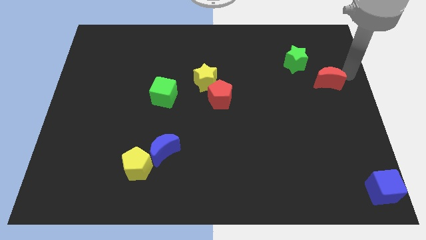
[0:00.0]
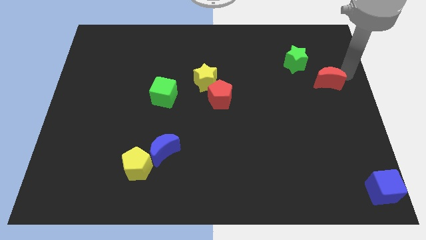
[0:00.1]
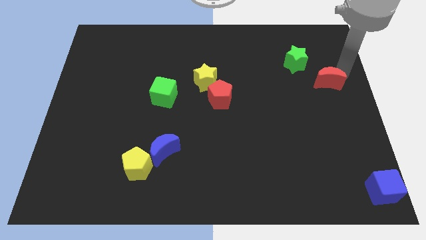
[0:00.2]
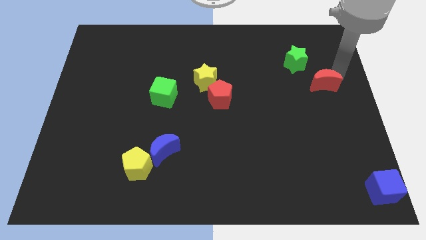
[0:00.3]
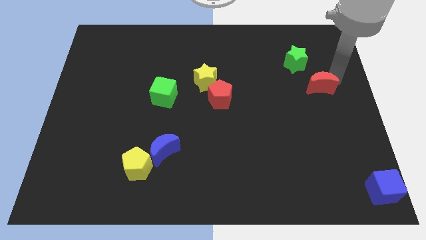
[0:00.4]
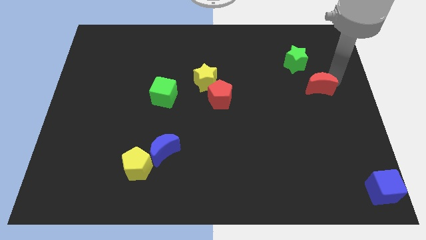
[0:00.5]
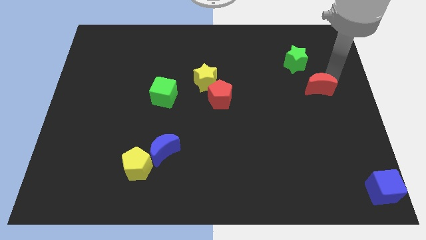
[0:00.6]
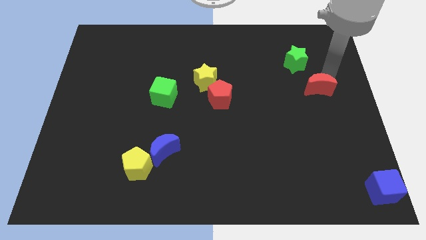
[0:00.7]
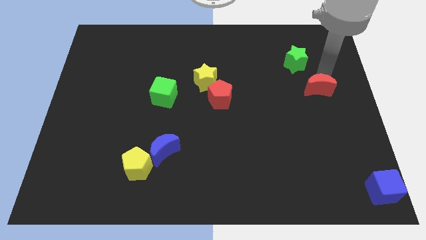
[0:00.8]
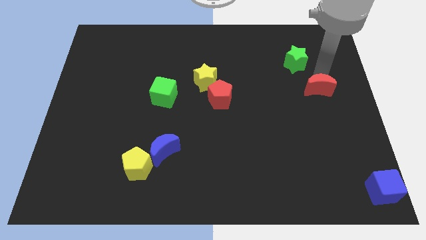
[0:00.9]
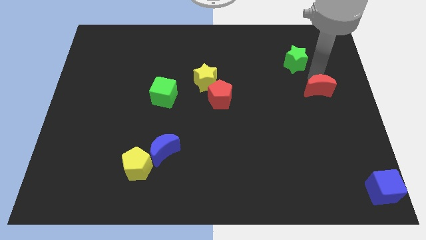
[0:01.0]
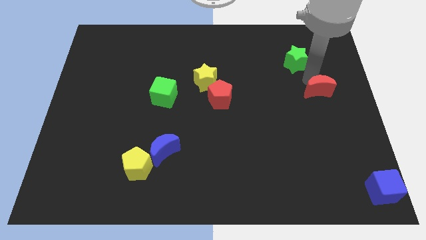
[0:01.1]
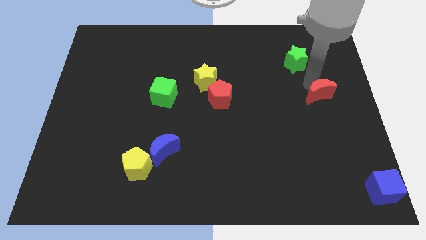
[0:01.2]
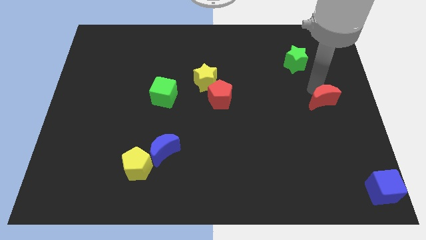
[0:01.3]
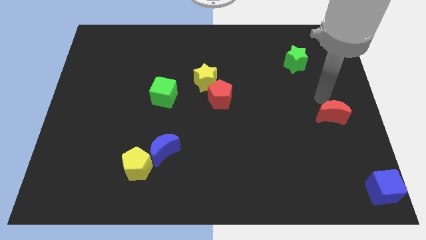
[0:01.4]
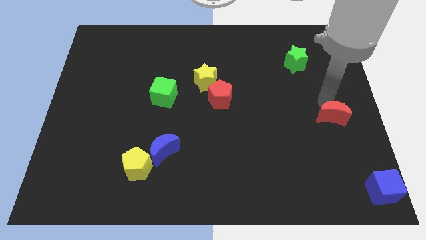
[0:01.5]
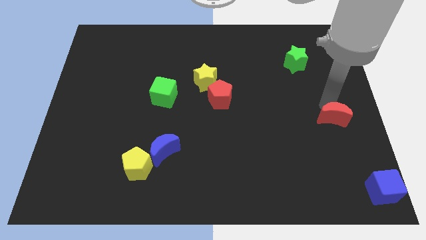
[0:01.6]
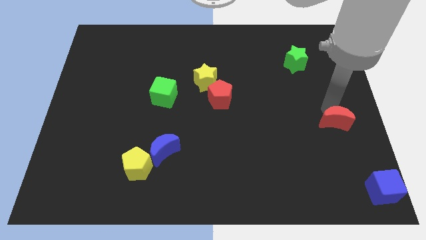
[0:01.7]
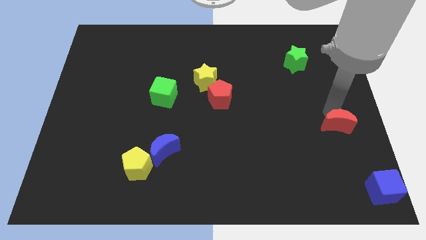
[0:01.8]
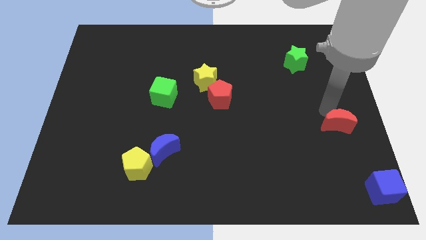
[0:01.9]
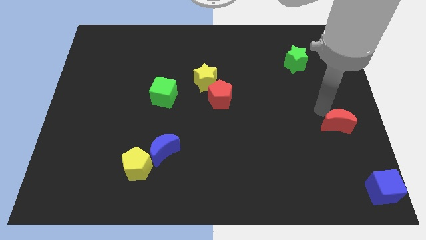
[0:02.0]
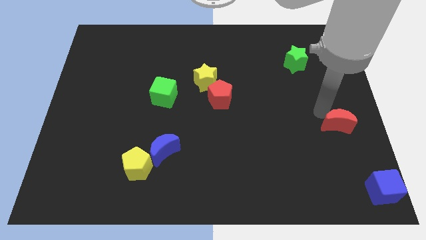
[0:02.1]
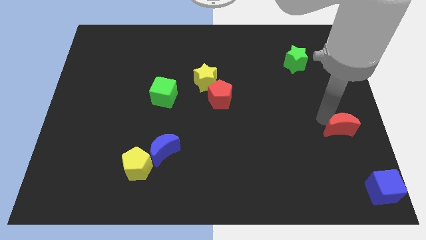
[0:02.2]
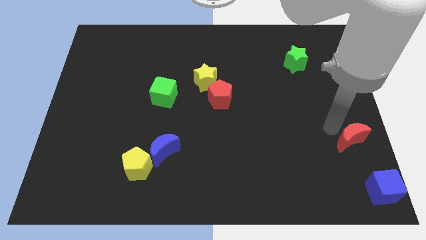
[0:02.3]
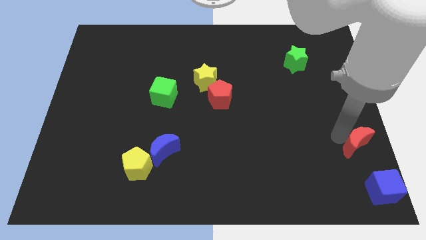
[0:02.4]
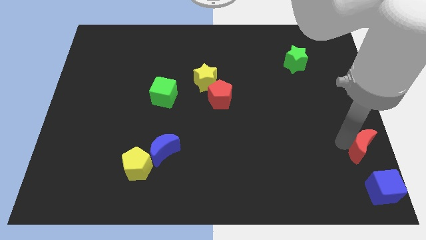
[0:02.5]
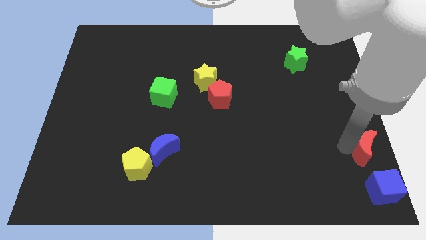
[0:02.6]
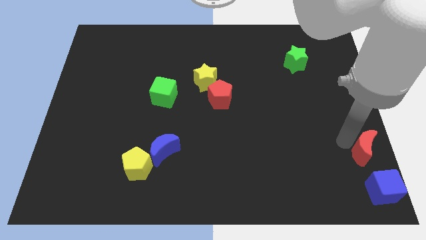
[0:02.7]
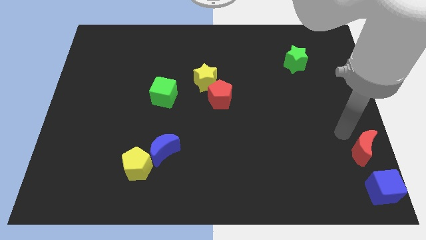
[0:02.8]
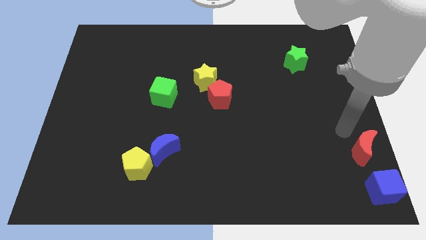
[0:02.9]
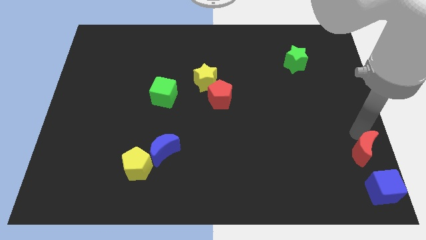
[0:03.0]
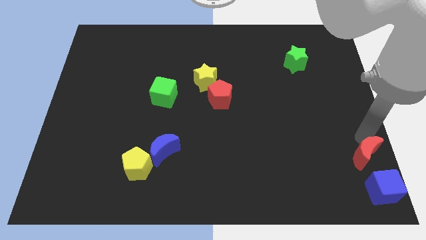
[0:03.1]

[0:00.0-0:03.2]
move the red moon above to the blue cube

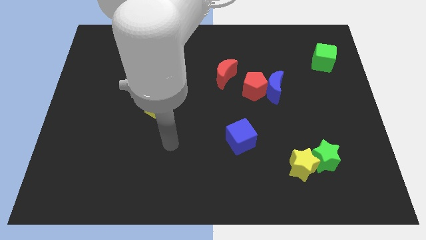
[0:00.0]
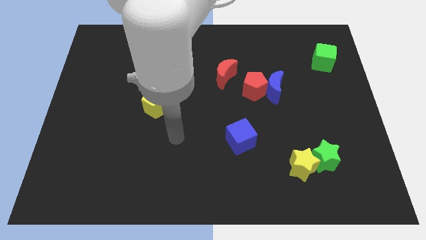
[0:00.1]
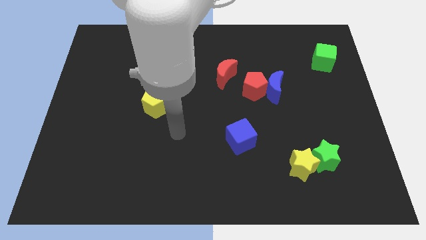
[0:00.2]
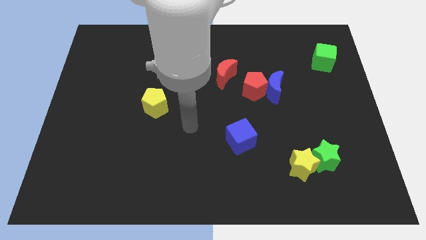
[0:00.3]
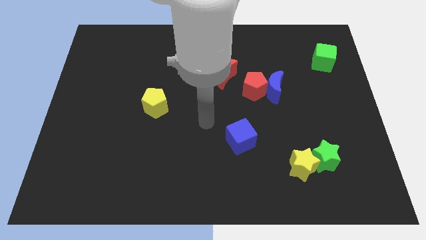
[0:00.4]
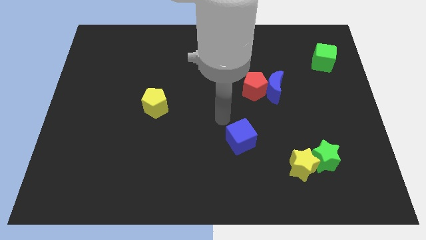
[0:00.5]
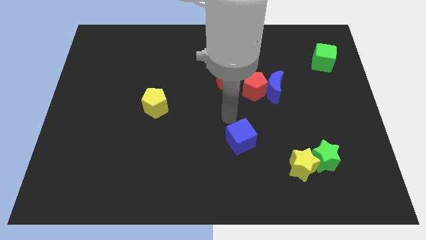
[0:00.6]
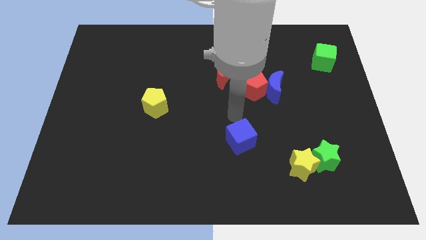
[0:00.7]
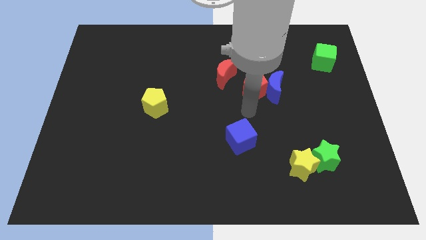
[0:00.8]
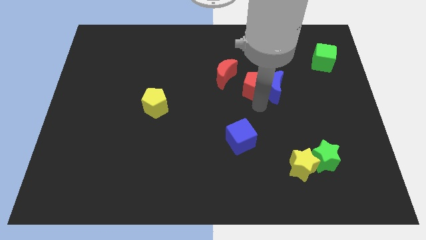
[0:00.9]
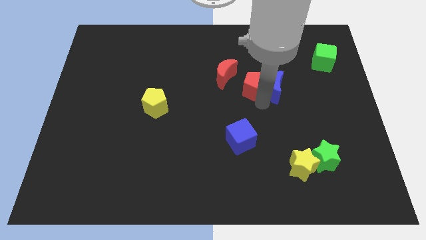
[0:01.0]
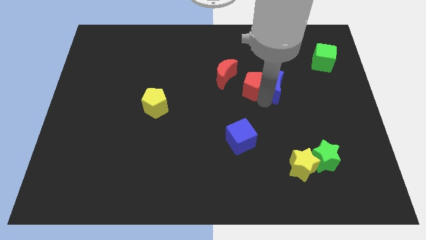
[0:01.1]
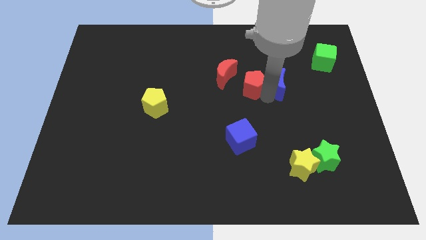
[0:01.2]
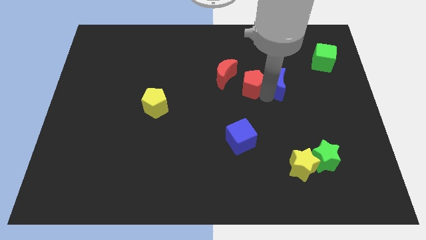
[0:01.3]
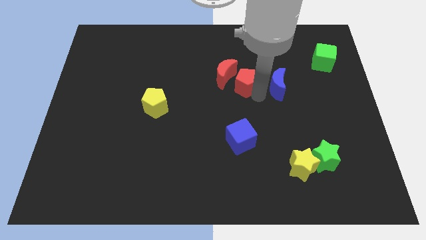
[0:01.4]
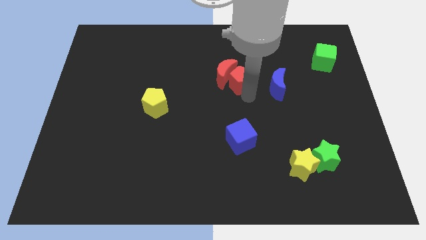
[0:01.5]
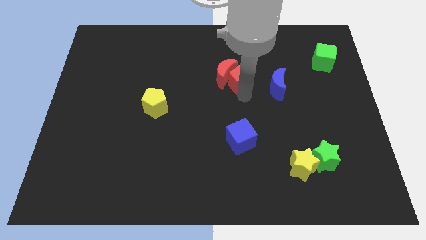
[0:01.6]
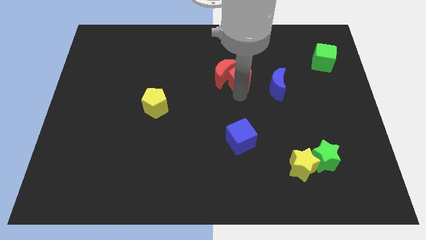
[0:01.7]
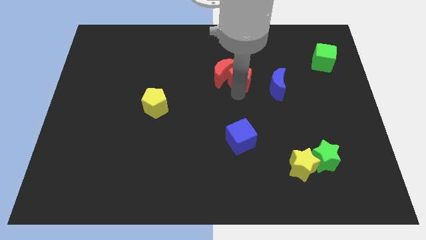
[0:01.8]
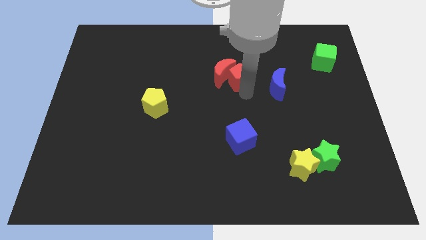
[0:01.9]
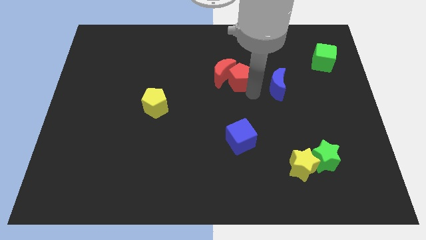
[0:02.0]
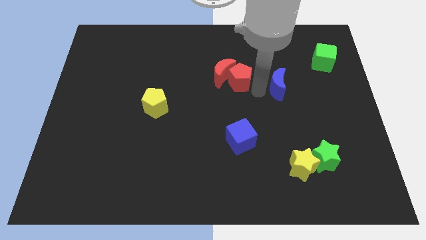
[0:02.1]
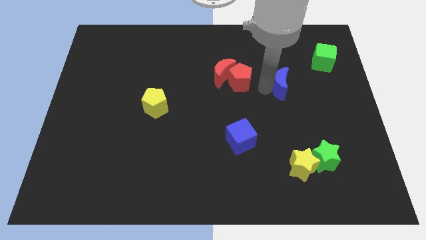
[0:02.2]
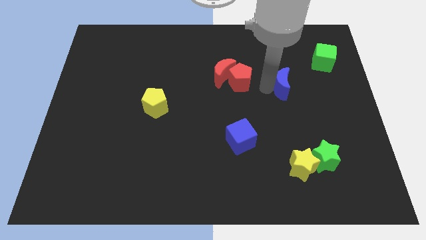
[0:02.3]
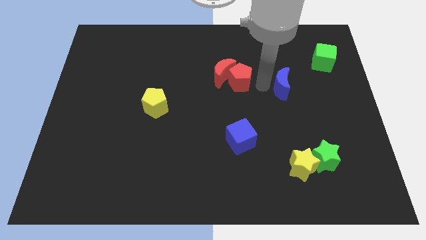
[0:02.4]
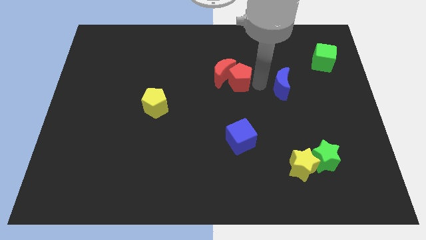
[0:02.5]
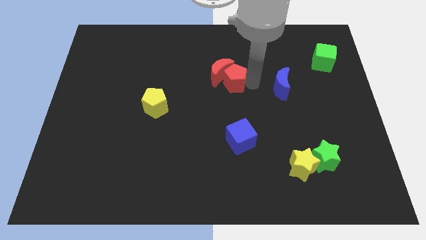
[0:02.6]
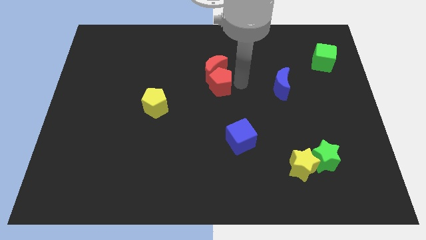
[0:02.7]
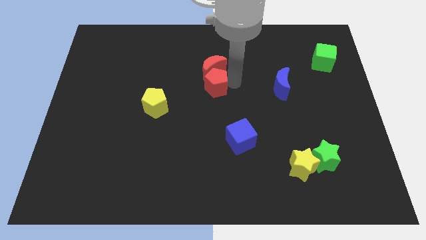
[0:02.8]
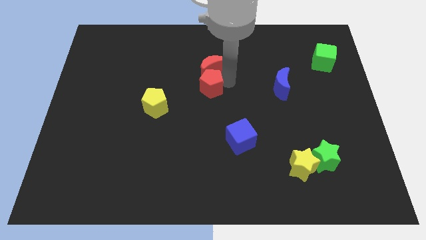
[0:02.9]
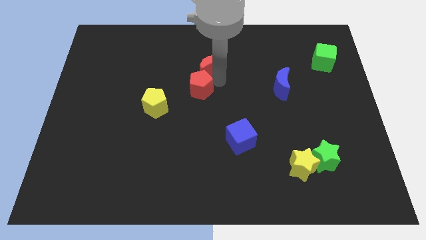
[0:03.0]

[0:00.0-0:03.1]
separate blue moon and red pentagon from each other

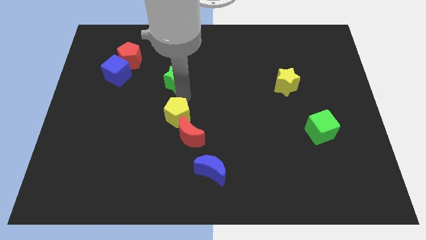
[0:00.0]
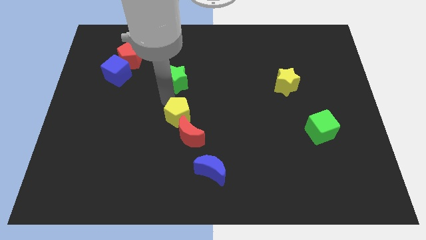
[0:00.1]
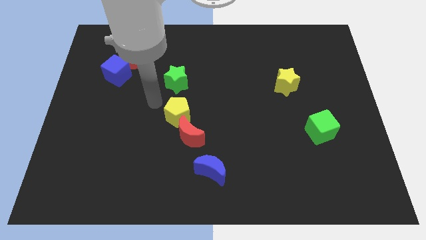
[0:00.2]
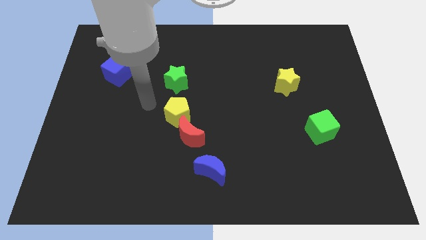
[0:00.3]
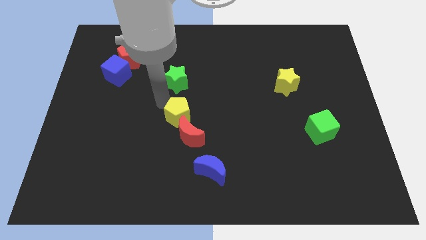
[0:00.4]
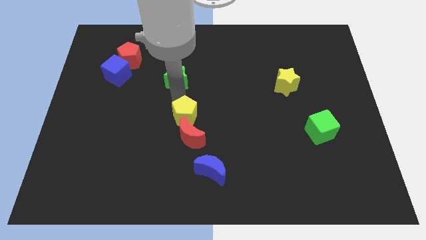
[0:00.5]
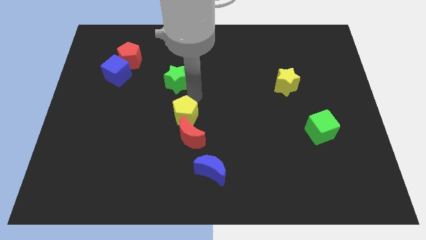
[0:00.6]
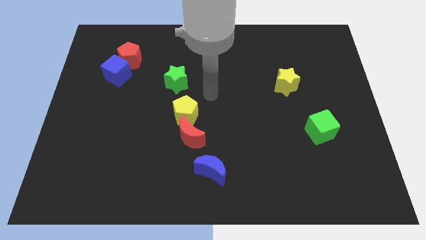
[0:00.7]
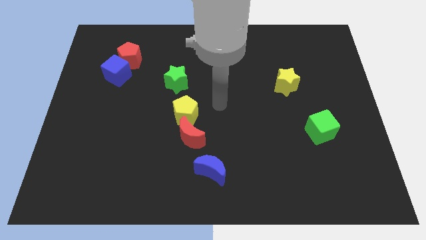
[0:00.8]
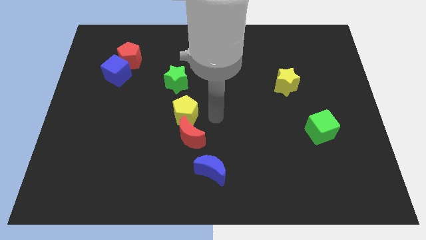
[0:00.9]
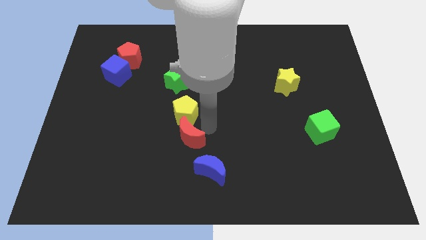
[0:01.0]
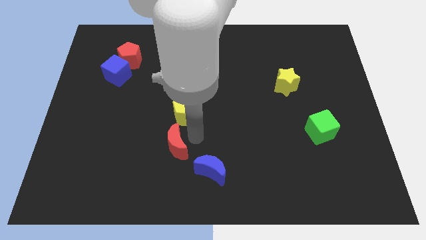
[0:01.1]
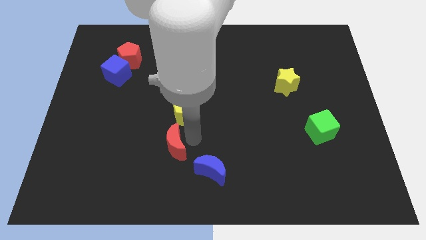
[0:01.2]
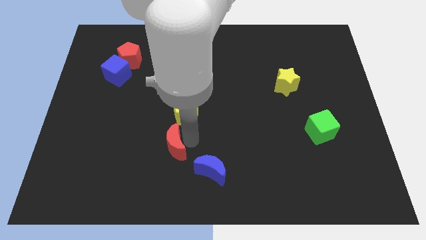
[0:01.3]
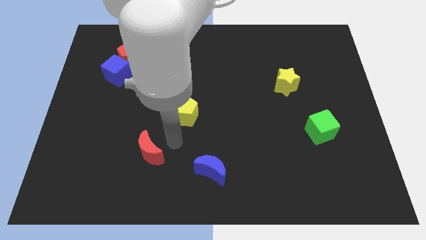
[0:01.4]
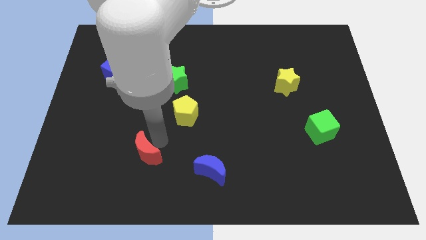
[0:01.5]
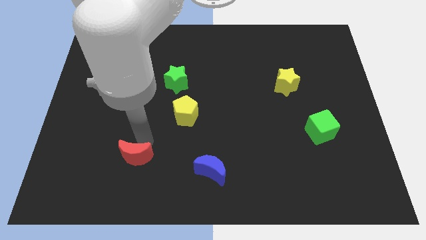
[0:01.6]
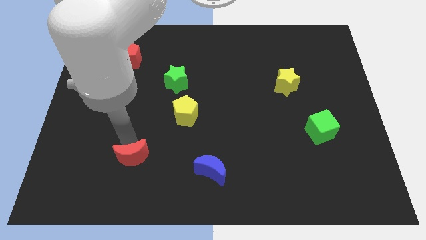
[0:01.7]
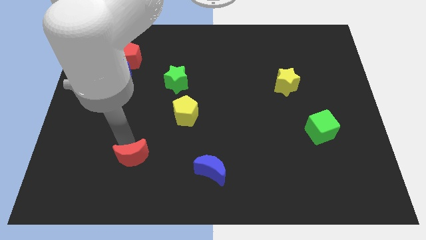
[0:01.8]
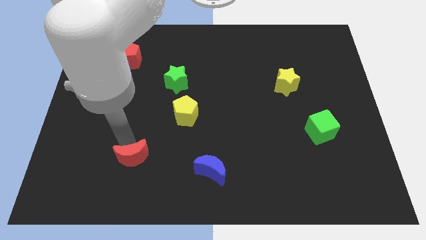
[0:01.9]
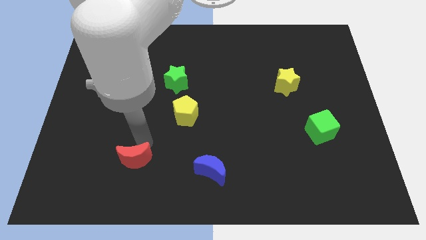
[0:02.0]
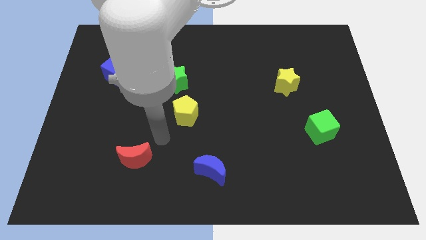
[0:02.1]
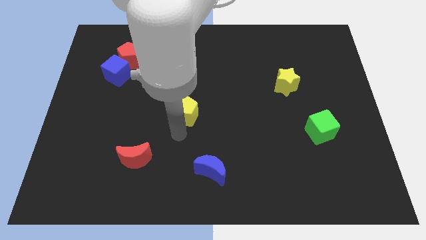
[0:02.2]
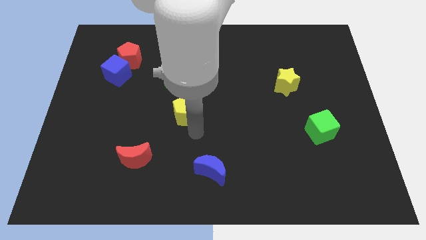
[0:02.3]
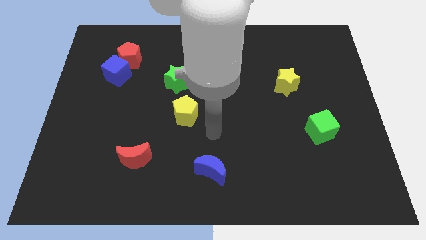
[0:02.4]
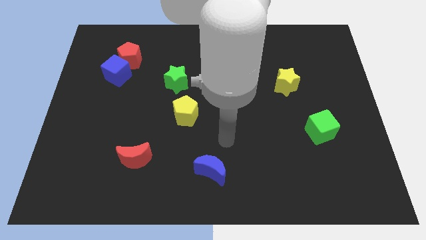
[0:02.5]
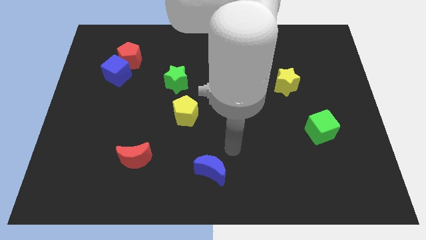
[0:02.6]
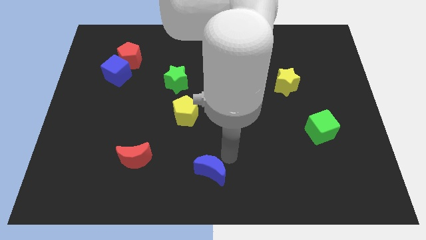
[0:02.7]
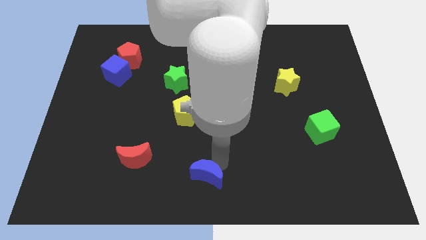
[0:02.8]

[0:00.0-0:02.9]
separate red moon from yellow pentagon
